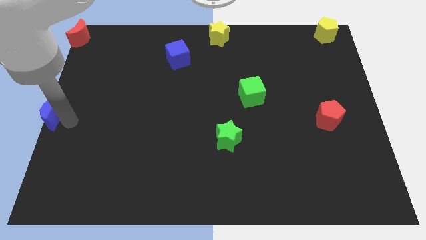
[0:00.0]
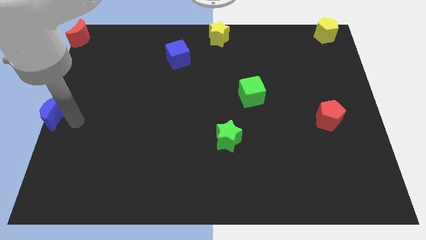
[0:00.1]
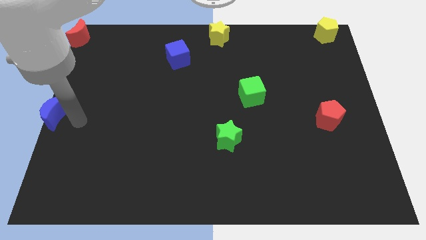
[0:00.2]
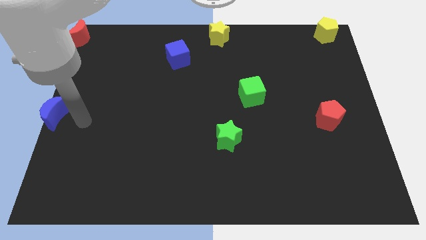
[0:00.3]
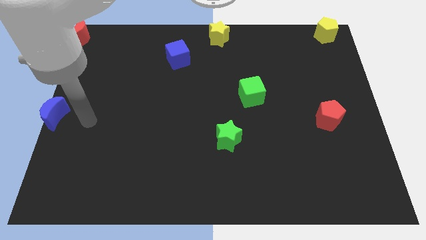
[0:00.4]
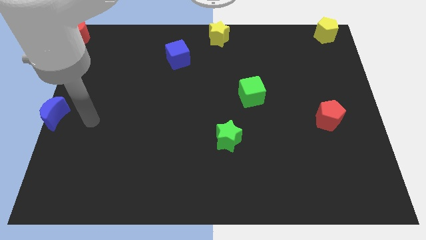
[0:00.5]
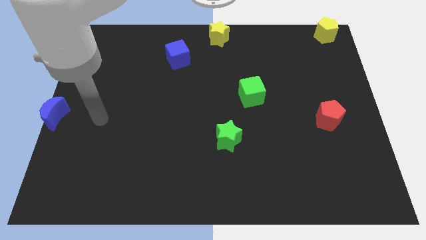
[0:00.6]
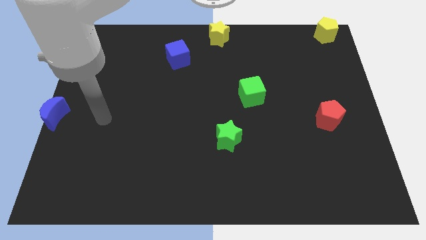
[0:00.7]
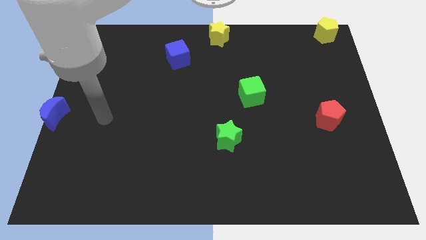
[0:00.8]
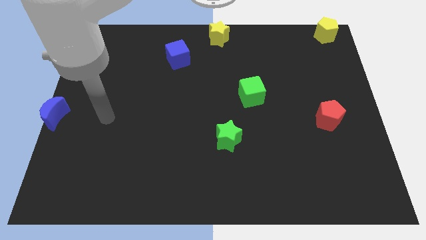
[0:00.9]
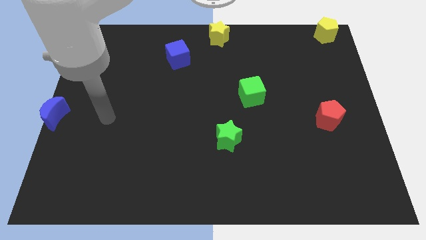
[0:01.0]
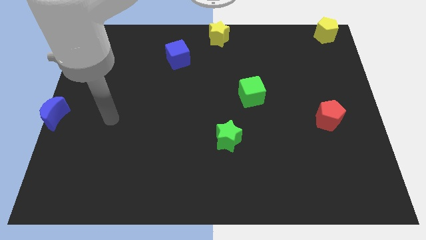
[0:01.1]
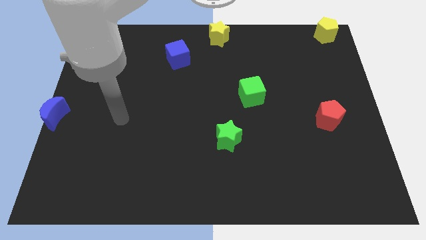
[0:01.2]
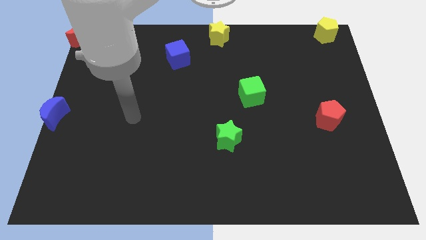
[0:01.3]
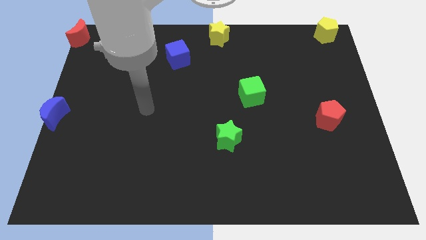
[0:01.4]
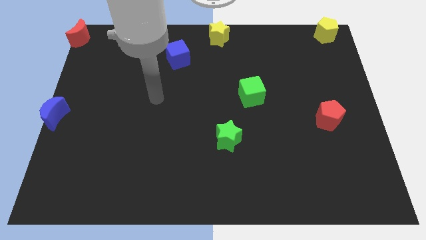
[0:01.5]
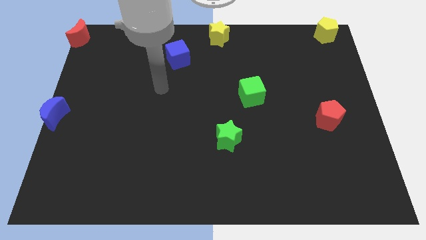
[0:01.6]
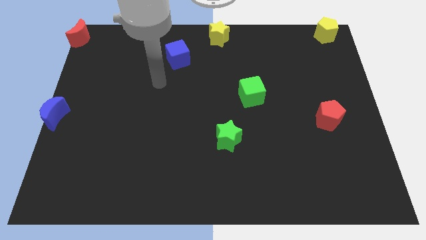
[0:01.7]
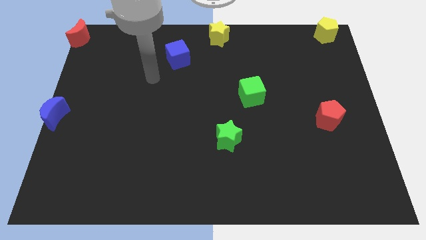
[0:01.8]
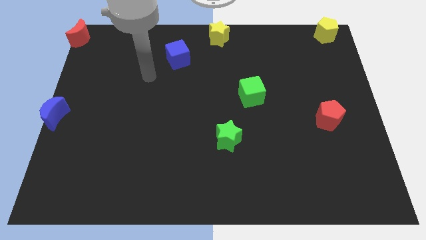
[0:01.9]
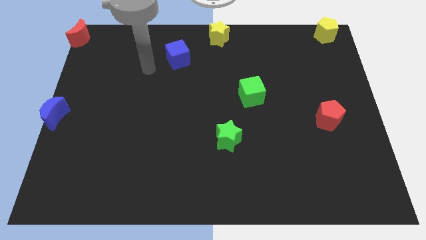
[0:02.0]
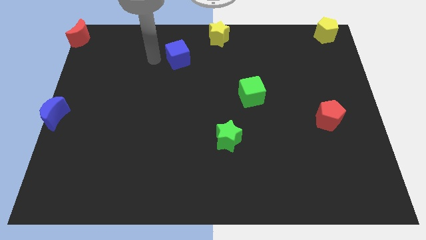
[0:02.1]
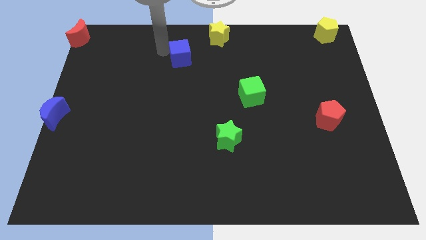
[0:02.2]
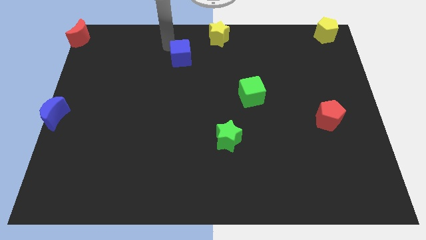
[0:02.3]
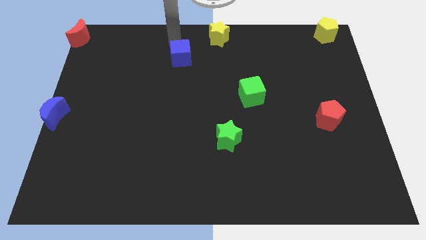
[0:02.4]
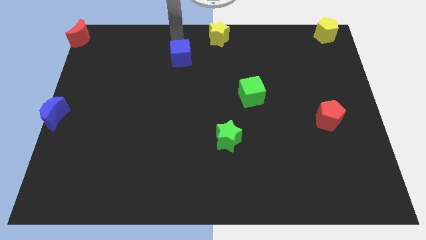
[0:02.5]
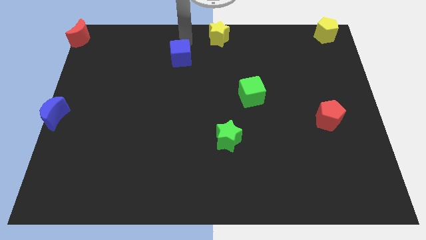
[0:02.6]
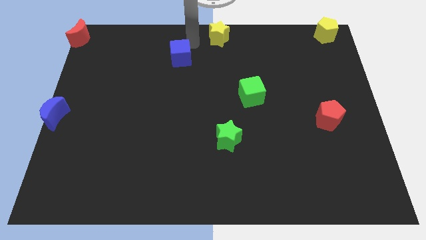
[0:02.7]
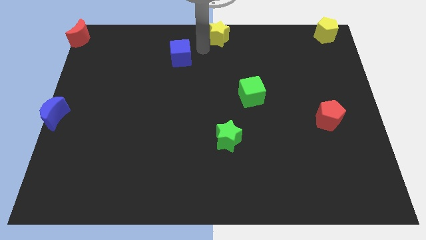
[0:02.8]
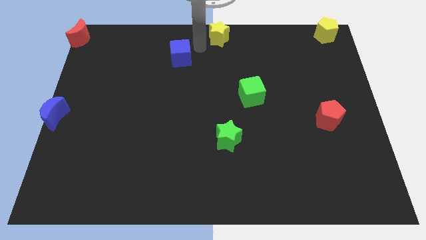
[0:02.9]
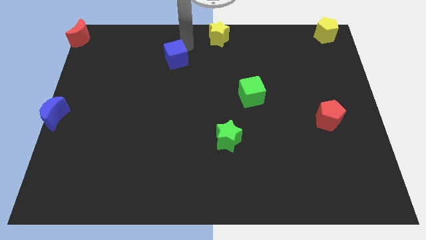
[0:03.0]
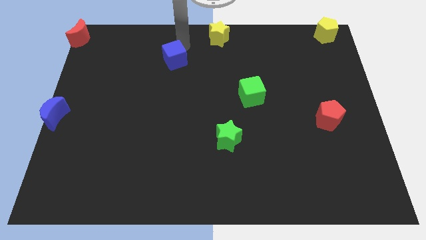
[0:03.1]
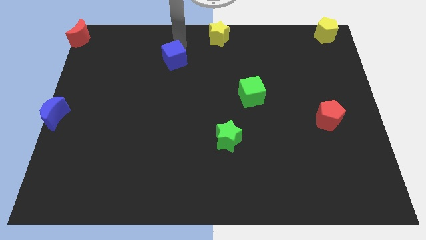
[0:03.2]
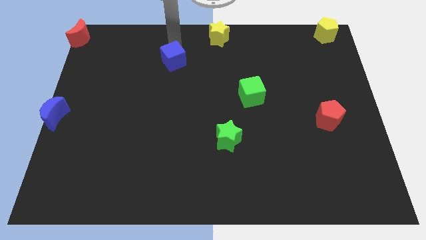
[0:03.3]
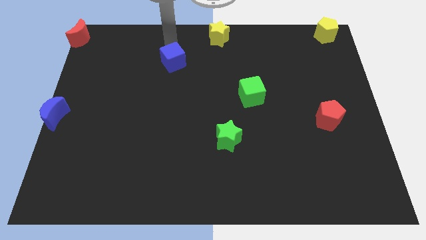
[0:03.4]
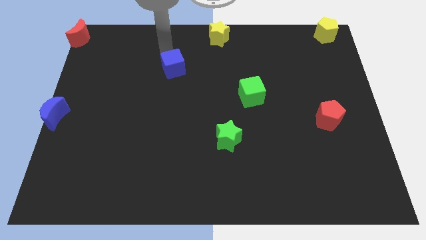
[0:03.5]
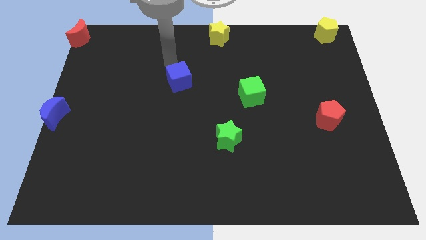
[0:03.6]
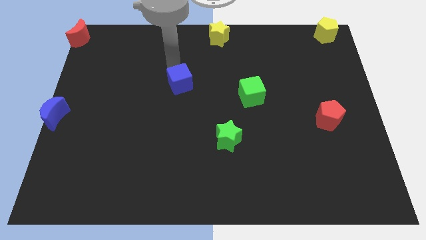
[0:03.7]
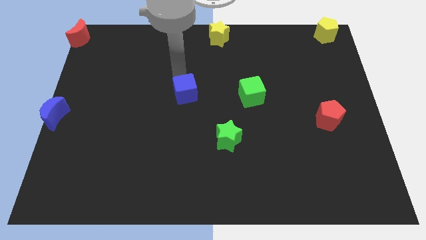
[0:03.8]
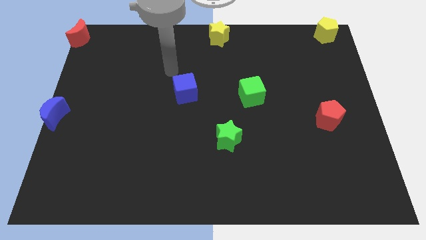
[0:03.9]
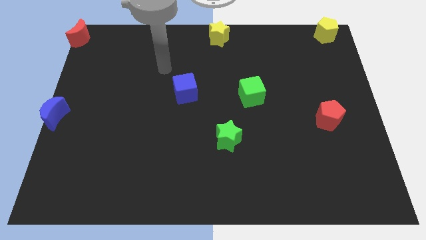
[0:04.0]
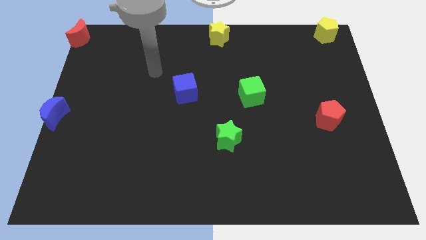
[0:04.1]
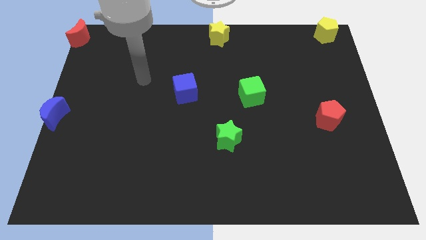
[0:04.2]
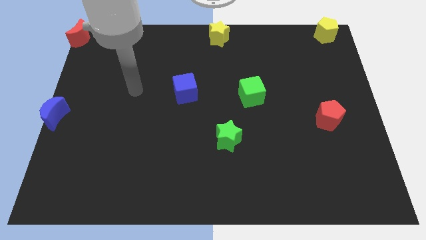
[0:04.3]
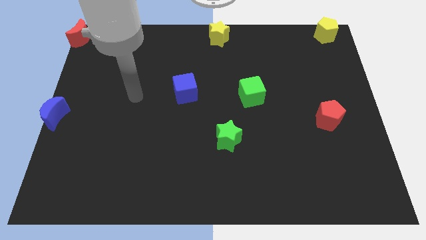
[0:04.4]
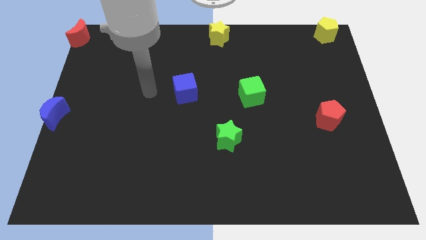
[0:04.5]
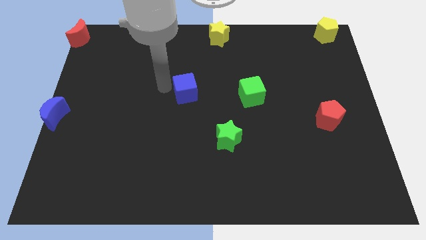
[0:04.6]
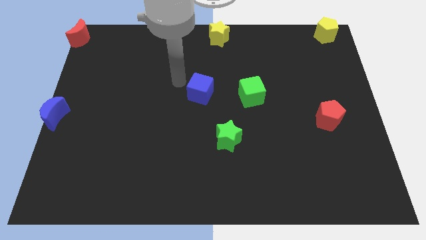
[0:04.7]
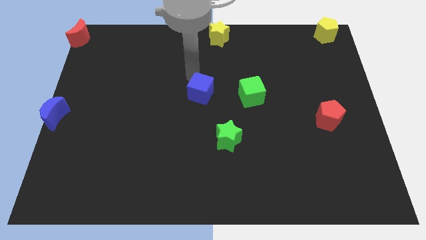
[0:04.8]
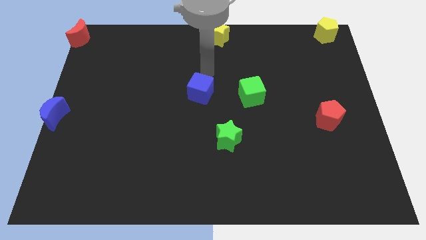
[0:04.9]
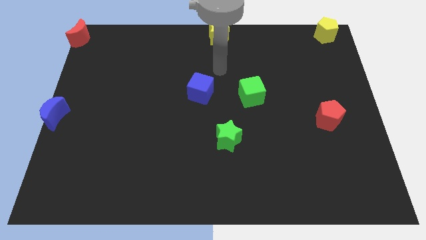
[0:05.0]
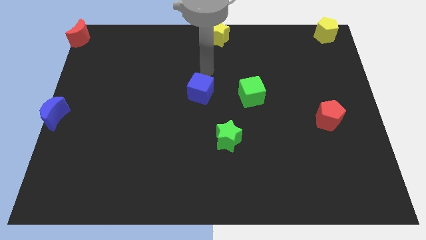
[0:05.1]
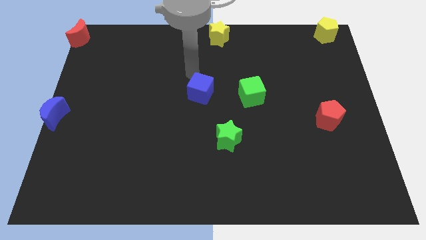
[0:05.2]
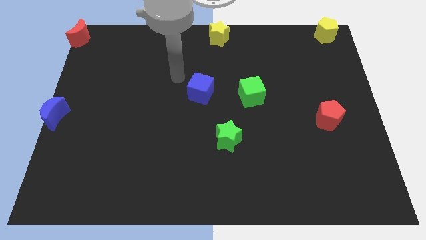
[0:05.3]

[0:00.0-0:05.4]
push the blue cube to the center of the board

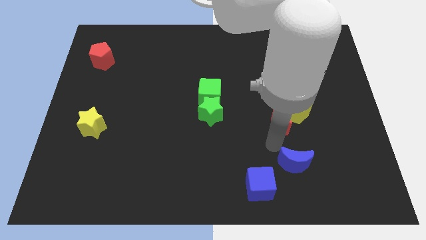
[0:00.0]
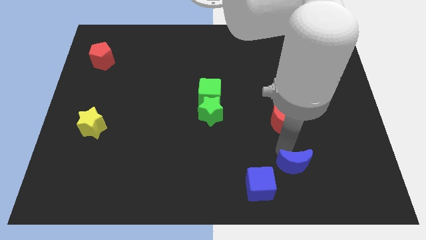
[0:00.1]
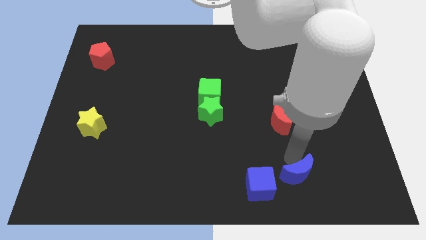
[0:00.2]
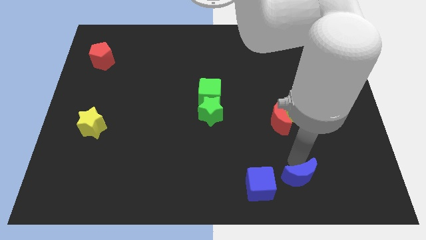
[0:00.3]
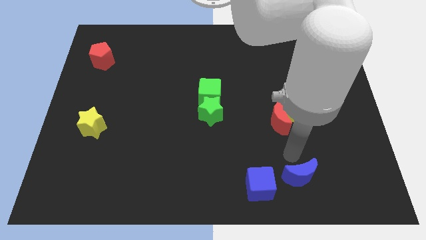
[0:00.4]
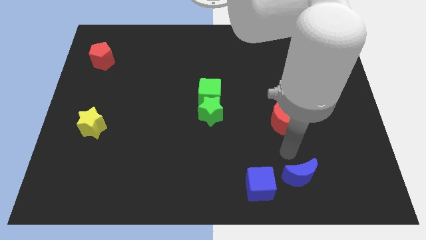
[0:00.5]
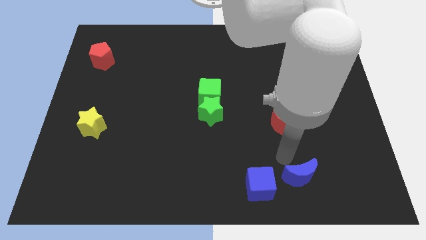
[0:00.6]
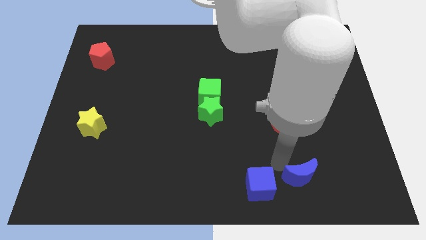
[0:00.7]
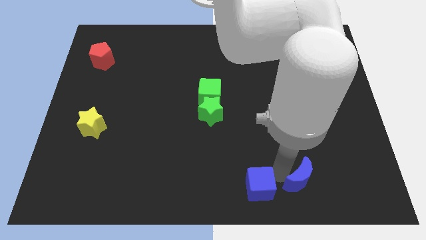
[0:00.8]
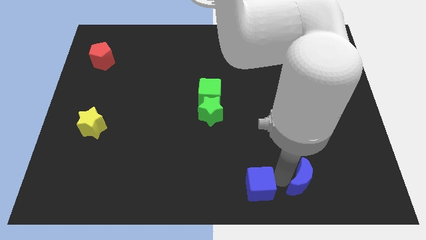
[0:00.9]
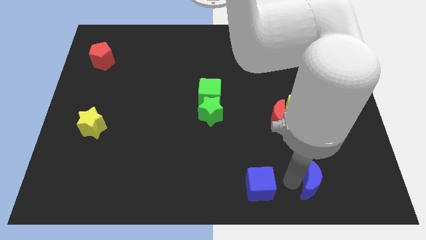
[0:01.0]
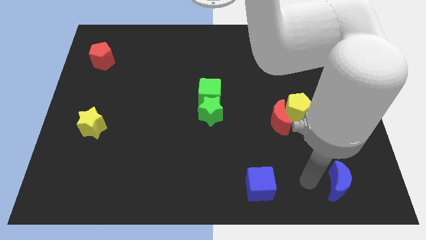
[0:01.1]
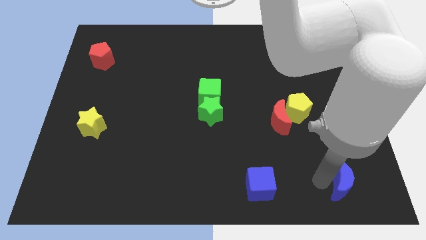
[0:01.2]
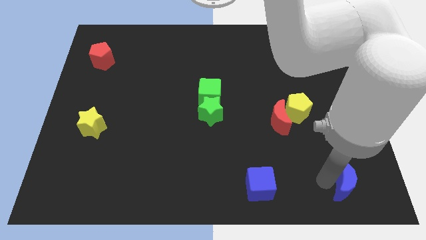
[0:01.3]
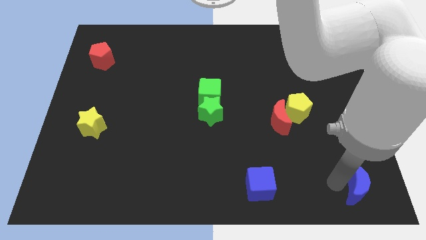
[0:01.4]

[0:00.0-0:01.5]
push the blue crescent to the bottom right horizontally right to the blue cube

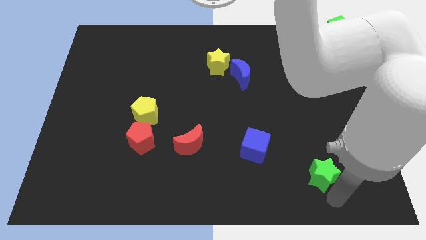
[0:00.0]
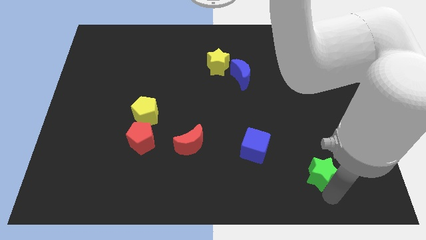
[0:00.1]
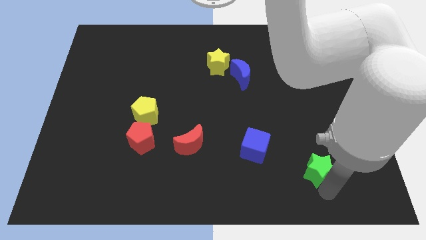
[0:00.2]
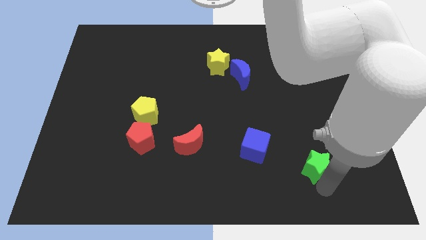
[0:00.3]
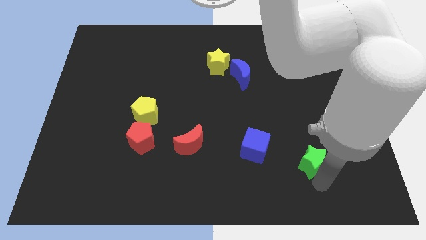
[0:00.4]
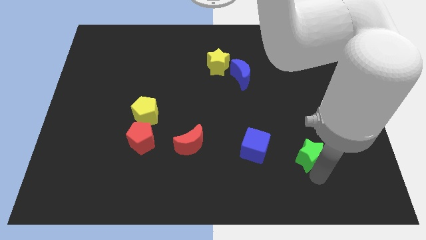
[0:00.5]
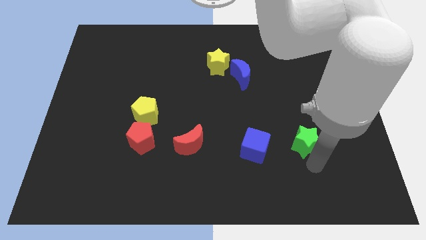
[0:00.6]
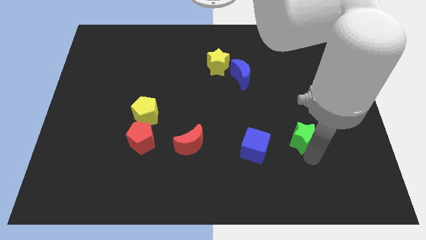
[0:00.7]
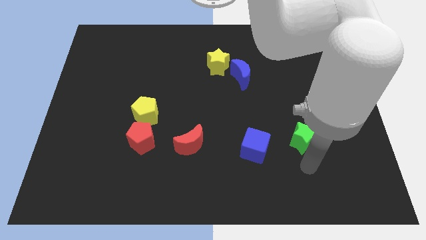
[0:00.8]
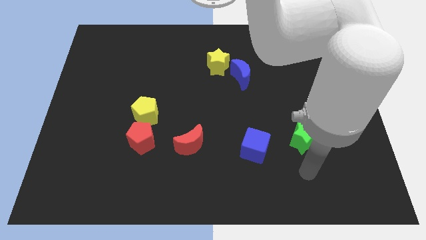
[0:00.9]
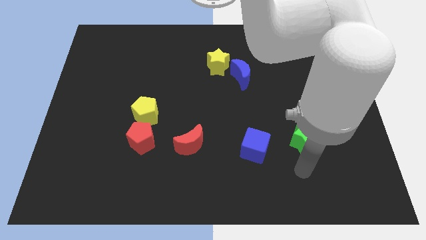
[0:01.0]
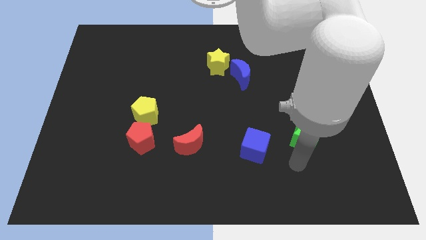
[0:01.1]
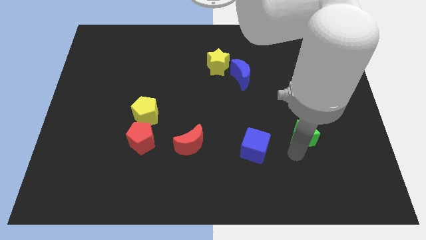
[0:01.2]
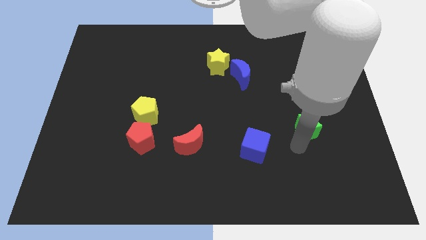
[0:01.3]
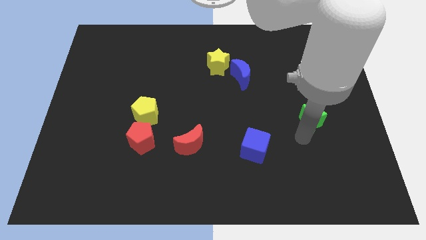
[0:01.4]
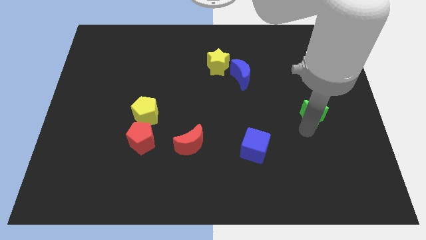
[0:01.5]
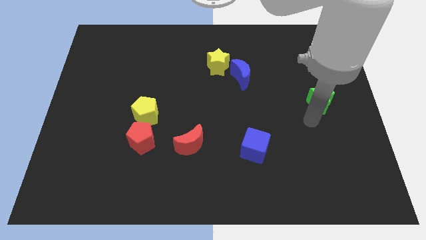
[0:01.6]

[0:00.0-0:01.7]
push green star to the right center of the board

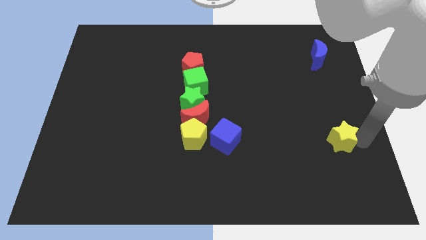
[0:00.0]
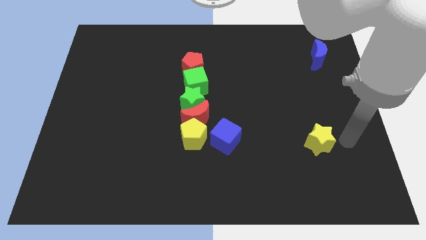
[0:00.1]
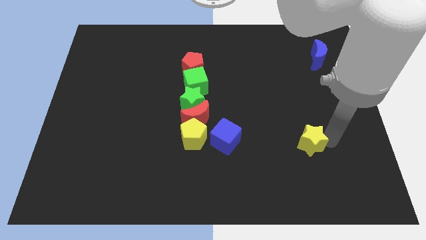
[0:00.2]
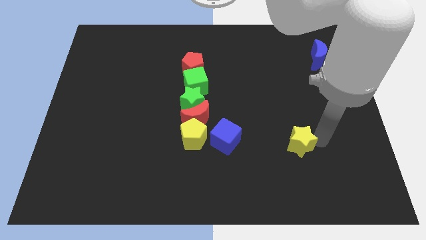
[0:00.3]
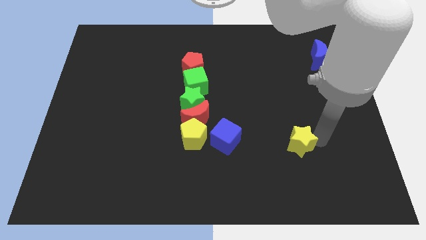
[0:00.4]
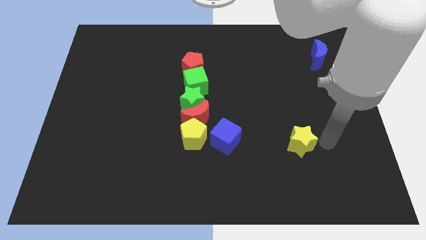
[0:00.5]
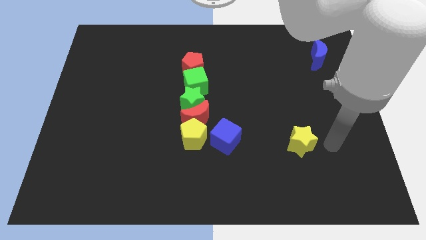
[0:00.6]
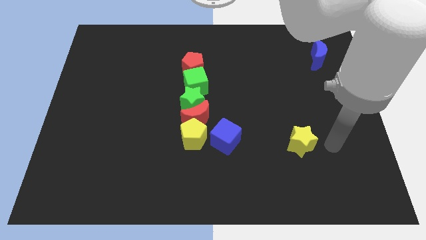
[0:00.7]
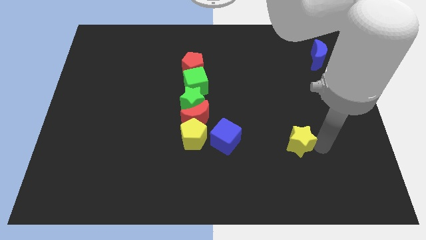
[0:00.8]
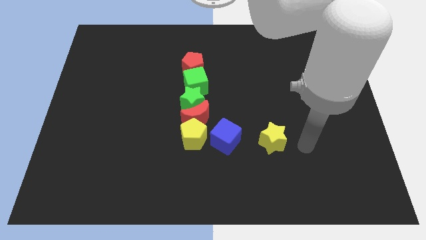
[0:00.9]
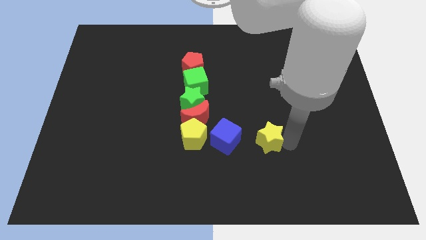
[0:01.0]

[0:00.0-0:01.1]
push the yellow star towards the blue cube
